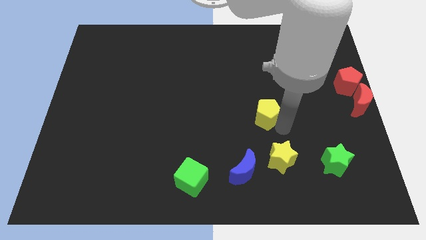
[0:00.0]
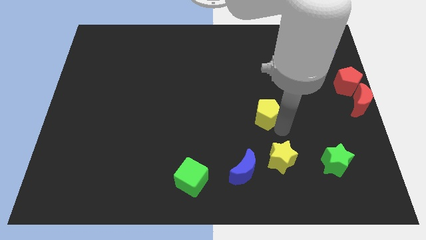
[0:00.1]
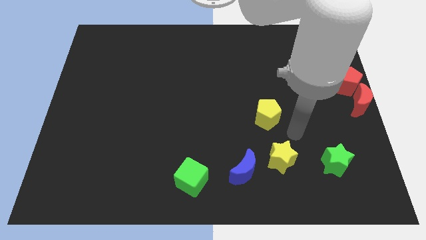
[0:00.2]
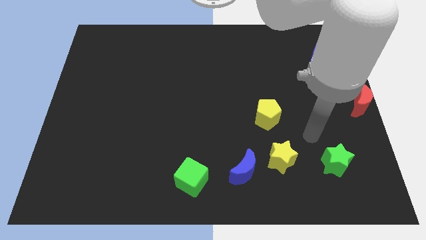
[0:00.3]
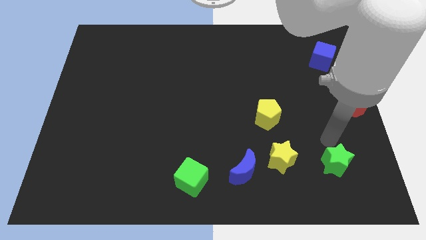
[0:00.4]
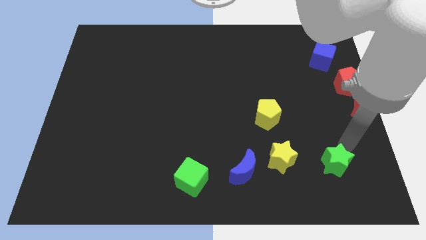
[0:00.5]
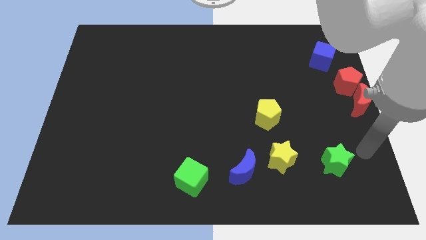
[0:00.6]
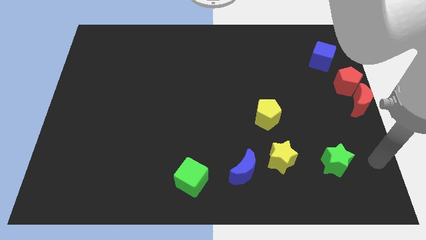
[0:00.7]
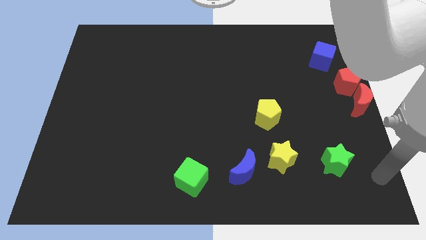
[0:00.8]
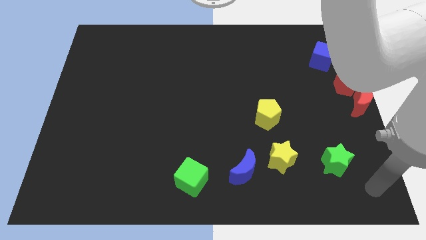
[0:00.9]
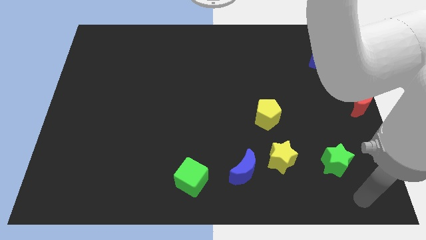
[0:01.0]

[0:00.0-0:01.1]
move the arm away from the yellow pentagon

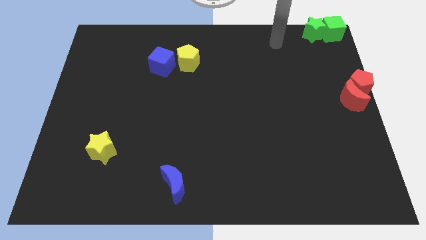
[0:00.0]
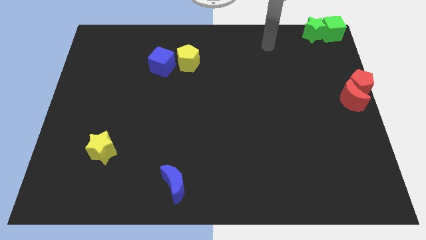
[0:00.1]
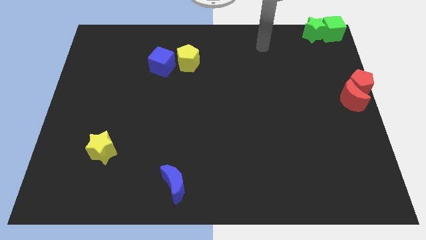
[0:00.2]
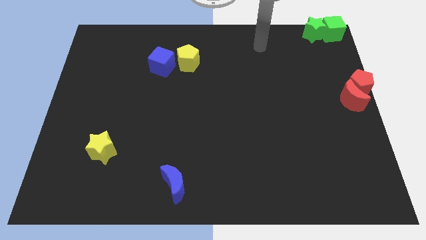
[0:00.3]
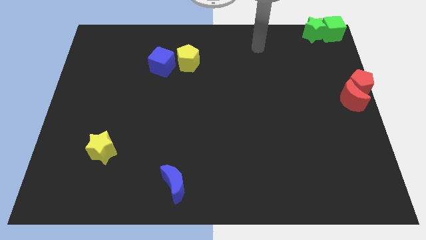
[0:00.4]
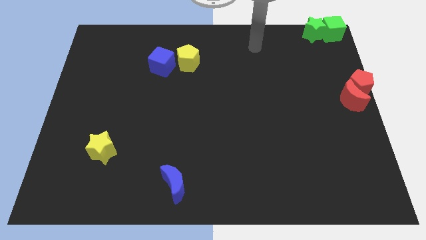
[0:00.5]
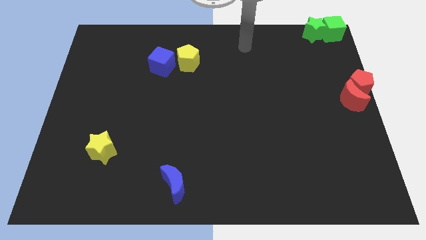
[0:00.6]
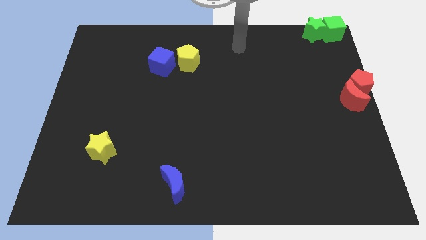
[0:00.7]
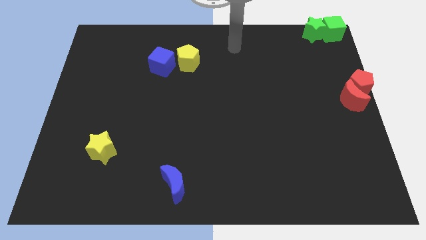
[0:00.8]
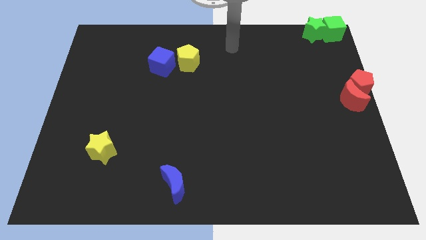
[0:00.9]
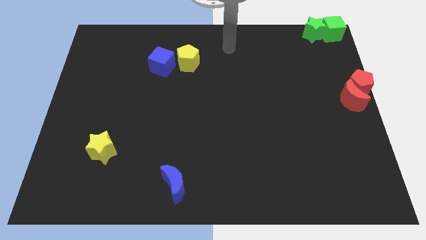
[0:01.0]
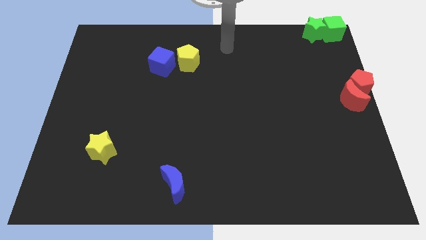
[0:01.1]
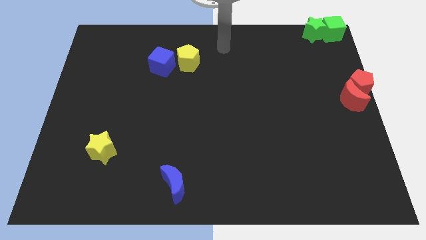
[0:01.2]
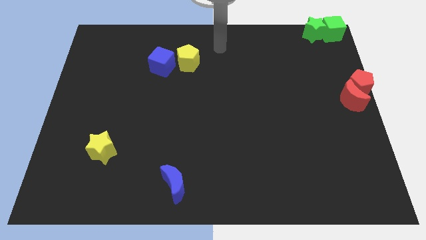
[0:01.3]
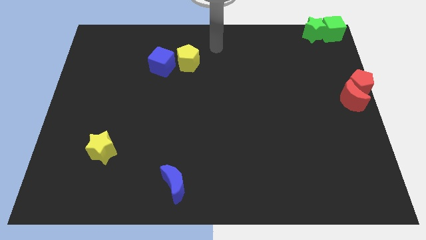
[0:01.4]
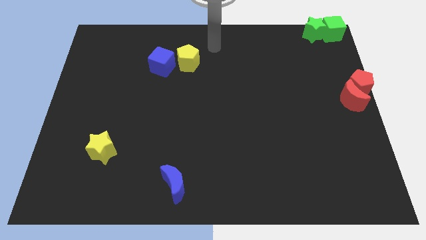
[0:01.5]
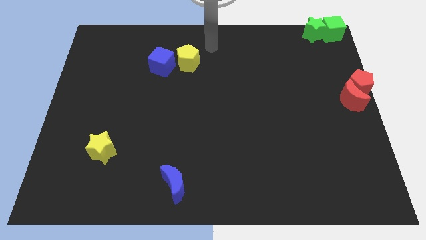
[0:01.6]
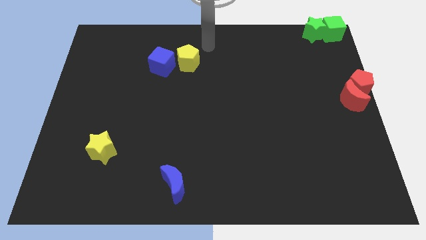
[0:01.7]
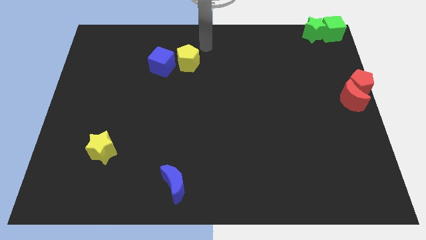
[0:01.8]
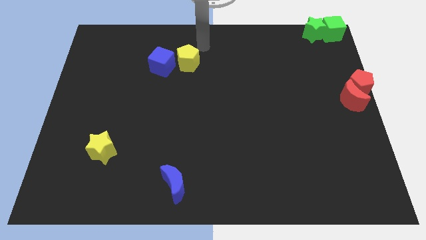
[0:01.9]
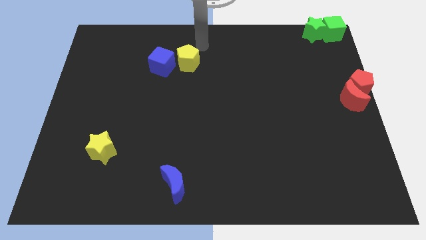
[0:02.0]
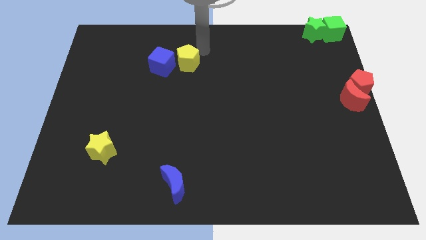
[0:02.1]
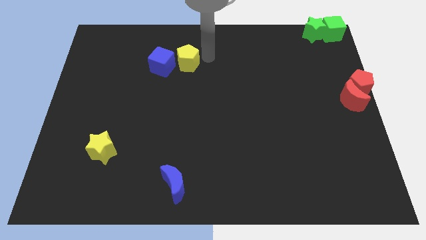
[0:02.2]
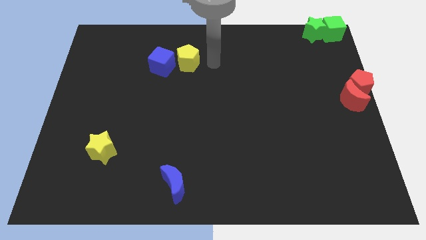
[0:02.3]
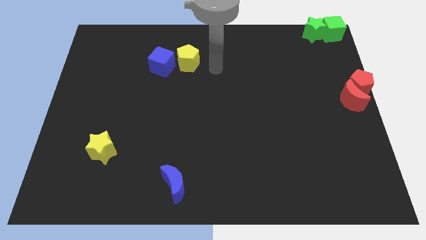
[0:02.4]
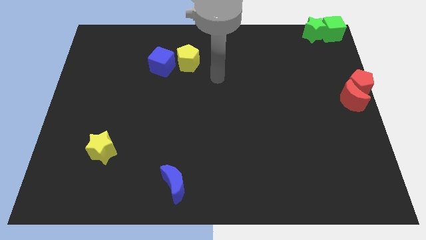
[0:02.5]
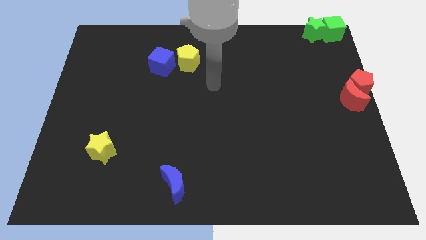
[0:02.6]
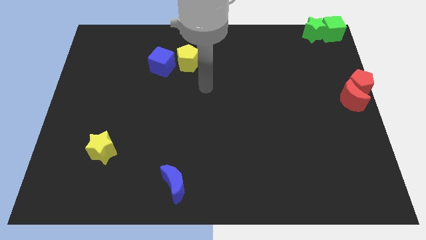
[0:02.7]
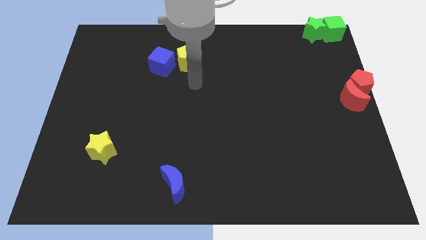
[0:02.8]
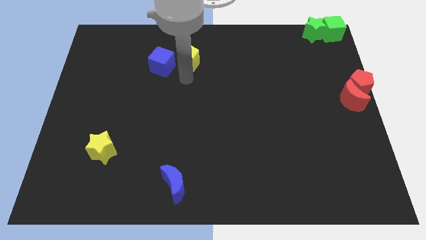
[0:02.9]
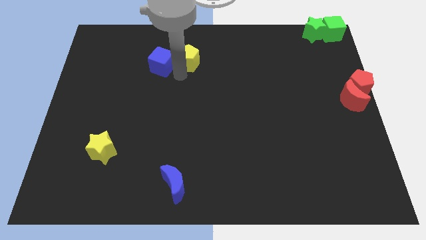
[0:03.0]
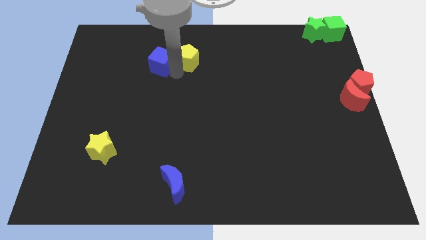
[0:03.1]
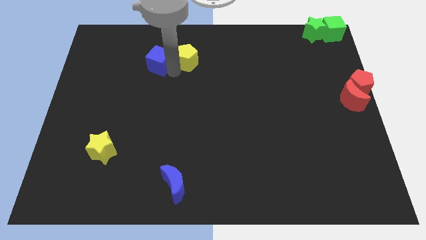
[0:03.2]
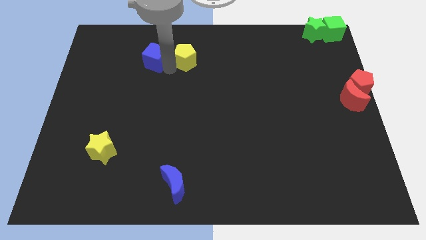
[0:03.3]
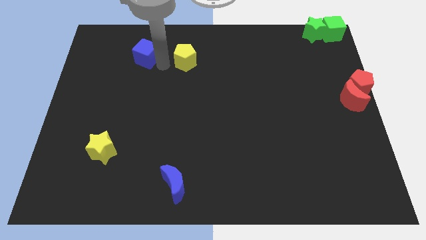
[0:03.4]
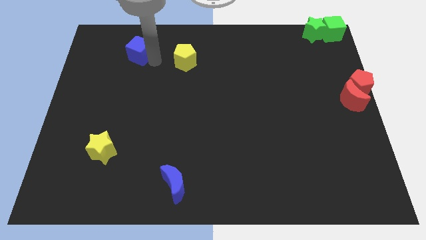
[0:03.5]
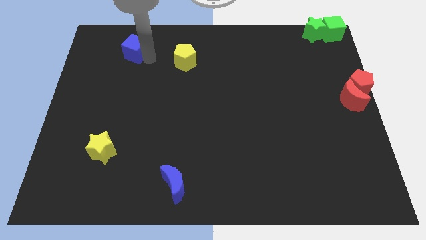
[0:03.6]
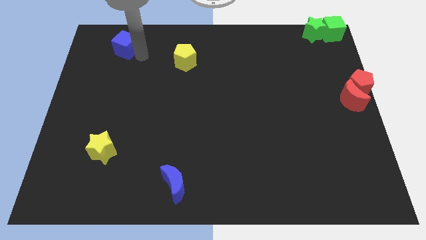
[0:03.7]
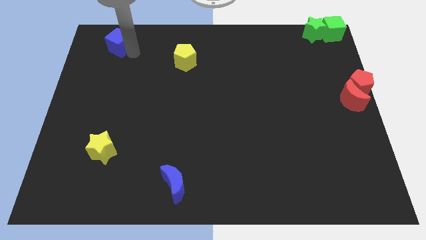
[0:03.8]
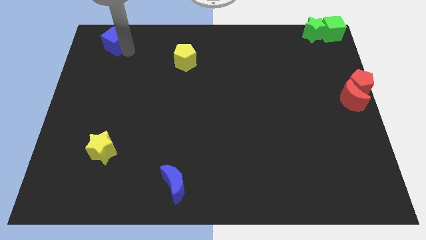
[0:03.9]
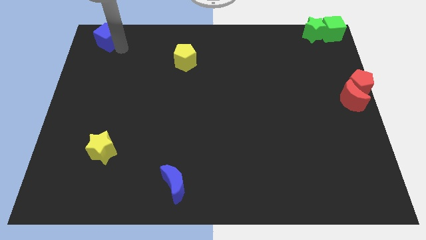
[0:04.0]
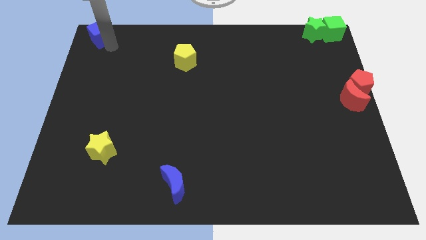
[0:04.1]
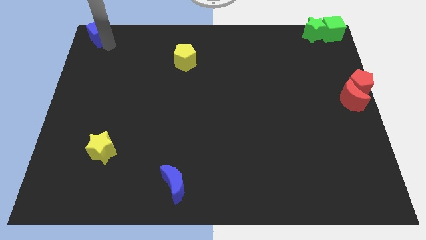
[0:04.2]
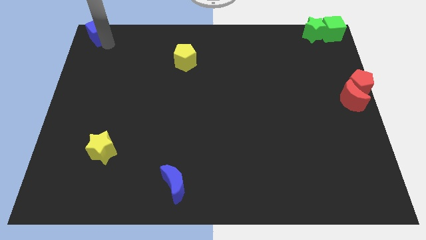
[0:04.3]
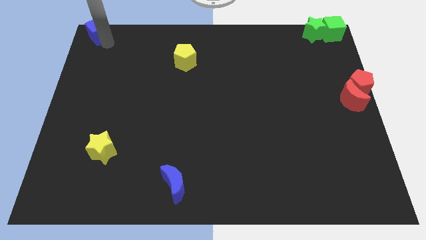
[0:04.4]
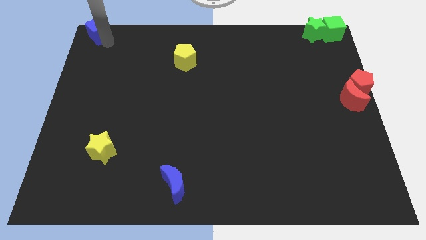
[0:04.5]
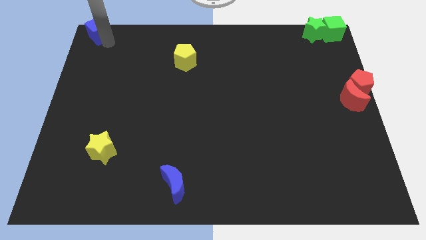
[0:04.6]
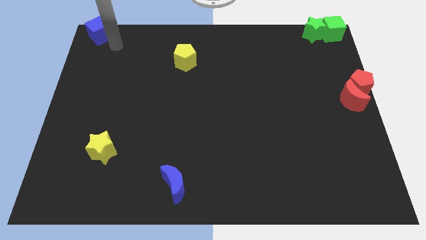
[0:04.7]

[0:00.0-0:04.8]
put the blue cube to the top left corner of the board

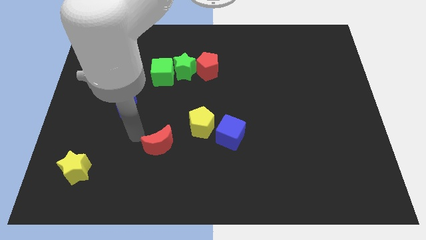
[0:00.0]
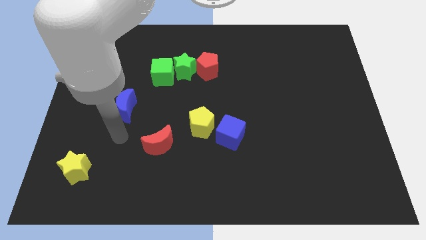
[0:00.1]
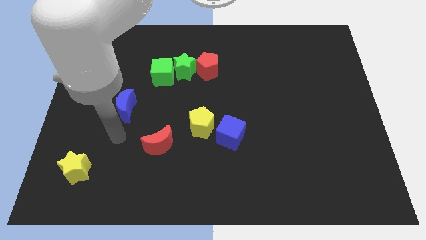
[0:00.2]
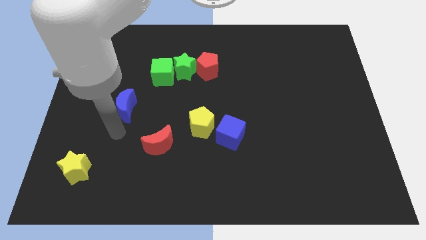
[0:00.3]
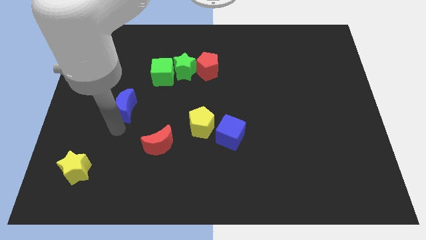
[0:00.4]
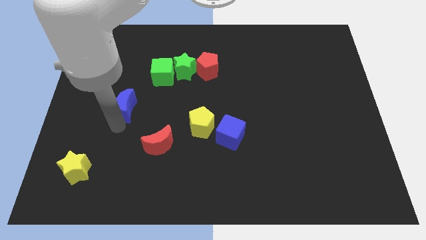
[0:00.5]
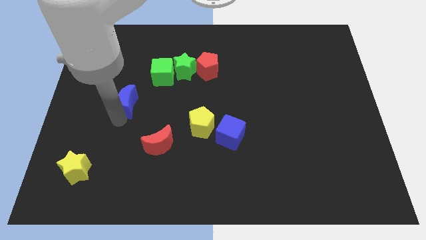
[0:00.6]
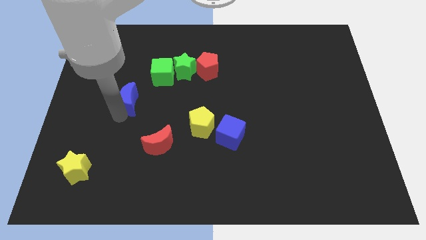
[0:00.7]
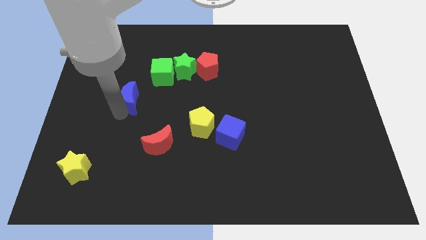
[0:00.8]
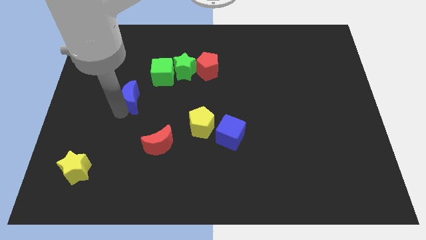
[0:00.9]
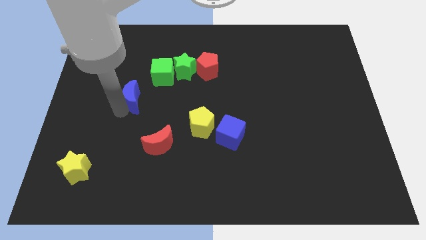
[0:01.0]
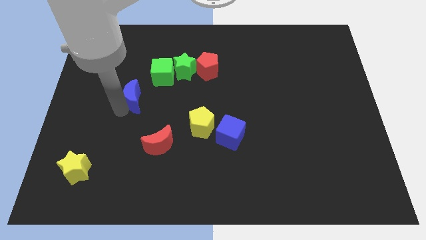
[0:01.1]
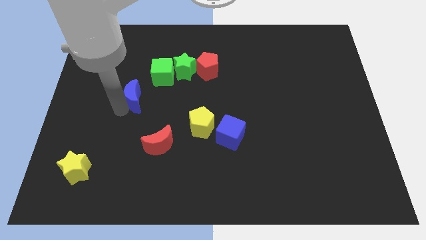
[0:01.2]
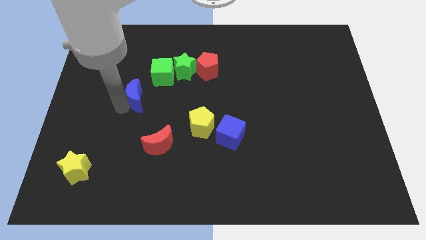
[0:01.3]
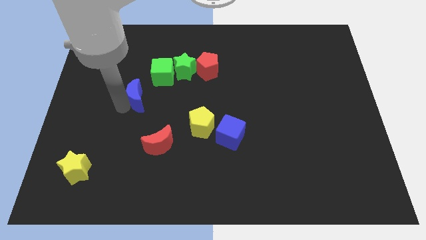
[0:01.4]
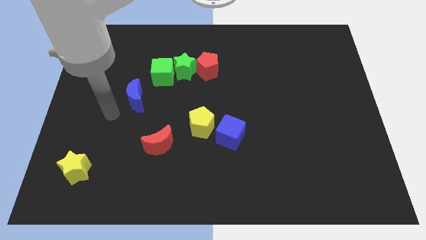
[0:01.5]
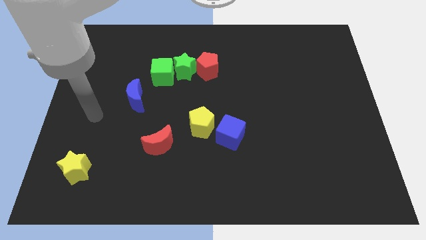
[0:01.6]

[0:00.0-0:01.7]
move the blue crescent near to the green cube

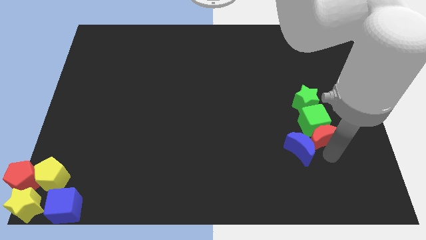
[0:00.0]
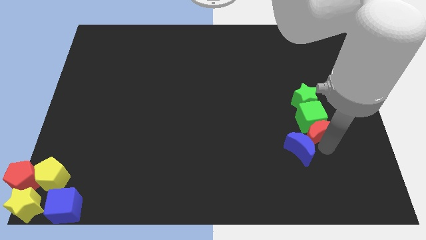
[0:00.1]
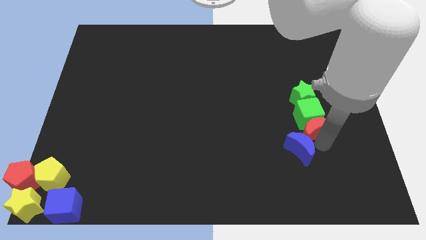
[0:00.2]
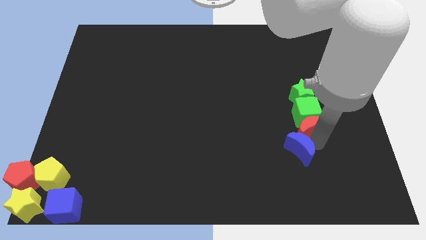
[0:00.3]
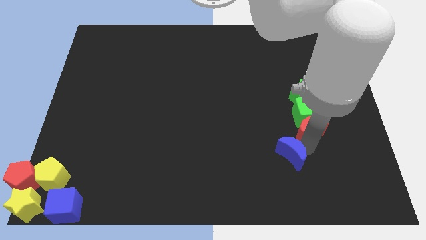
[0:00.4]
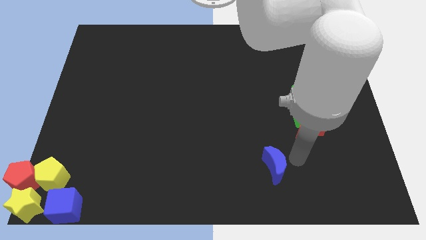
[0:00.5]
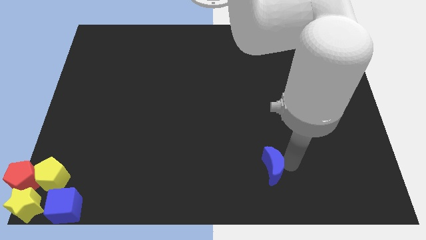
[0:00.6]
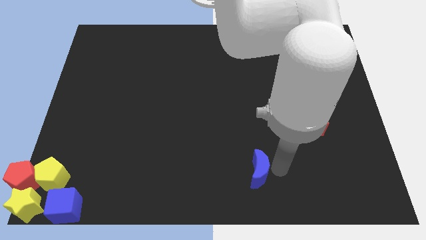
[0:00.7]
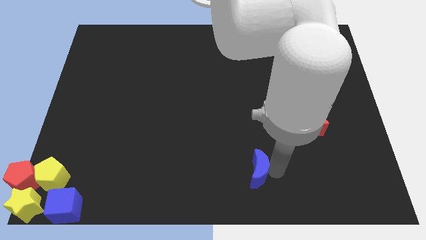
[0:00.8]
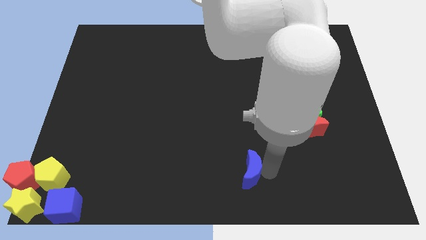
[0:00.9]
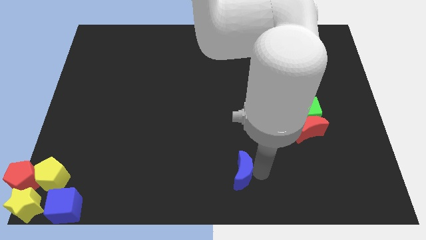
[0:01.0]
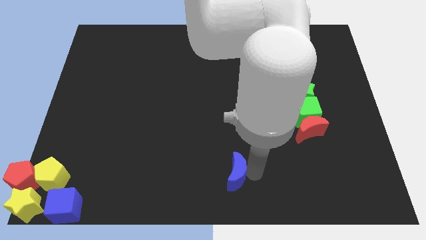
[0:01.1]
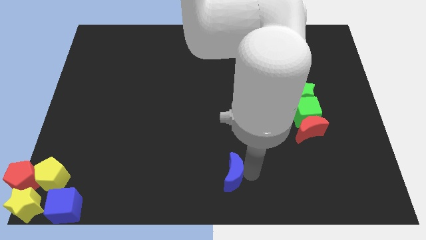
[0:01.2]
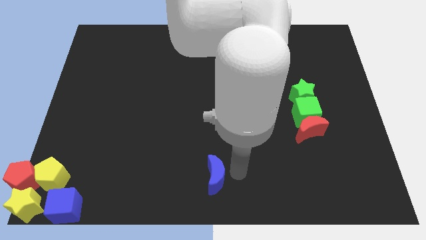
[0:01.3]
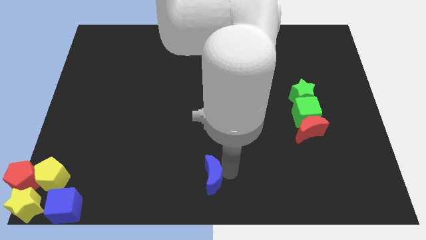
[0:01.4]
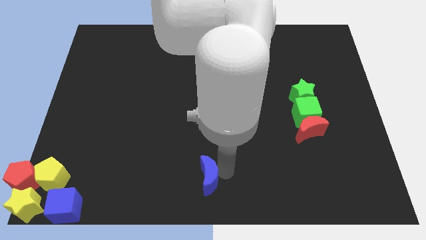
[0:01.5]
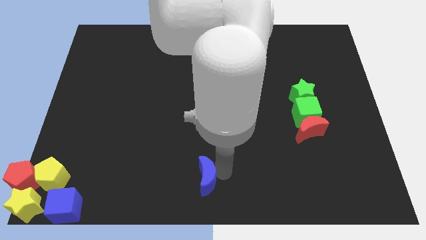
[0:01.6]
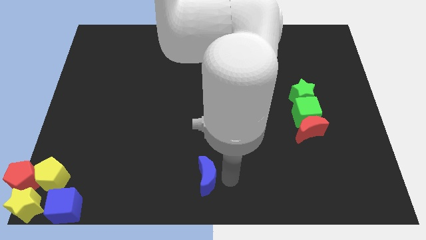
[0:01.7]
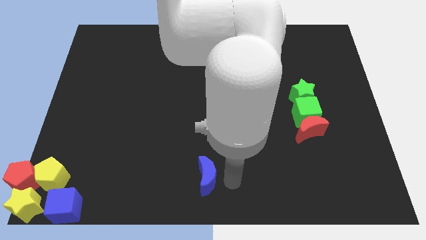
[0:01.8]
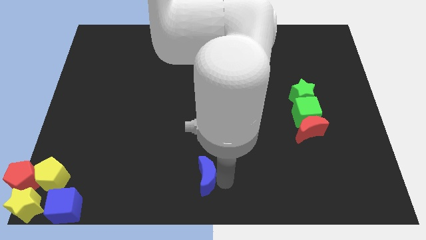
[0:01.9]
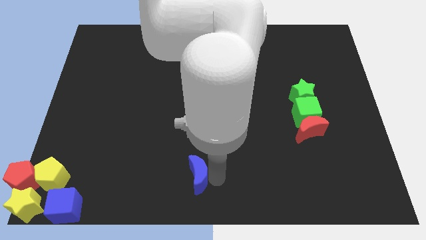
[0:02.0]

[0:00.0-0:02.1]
push the blue moon to the bottom center of the board
